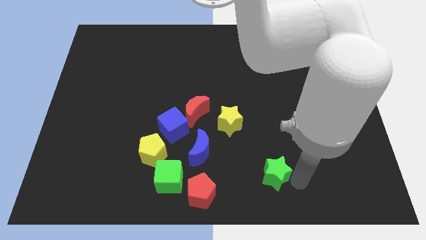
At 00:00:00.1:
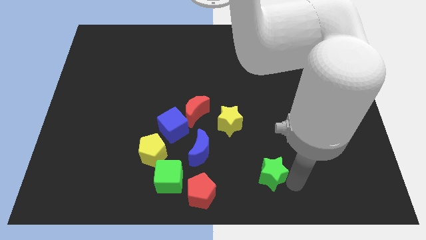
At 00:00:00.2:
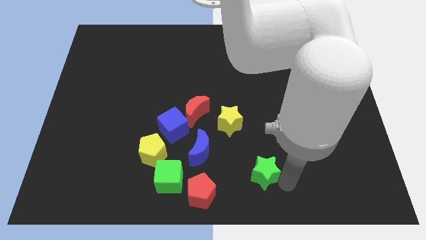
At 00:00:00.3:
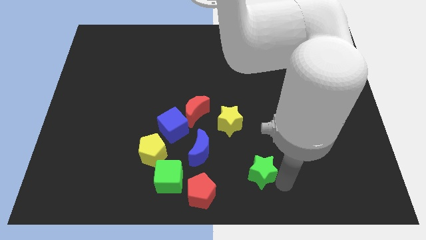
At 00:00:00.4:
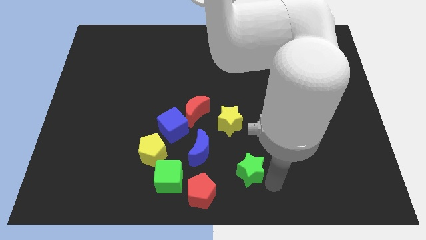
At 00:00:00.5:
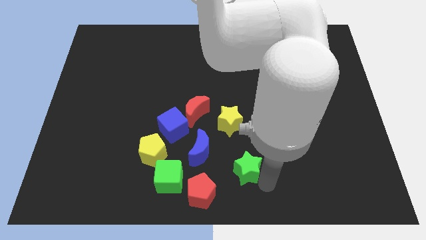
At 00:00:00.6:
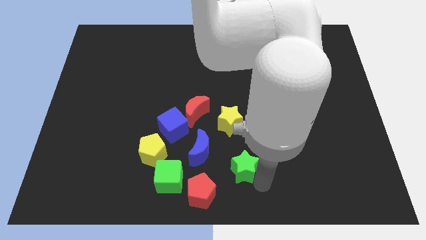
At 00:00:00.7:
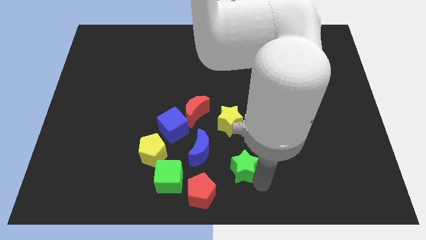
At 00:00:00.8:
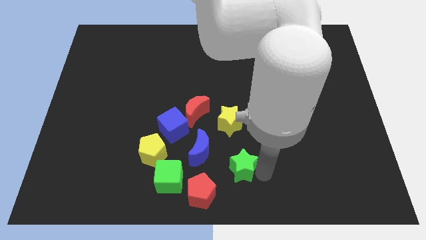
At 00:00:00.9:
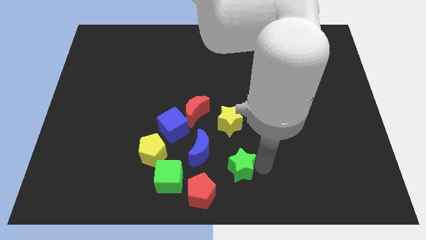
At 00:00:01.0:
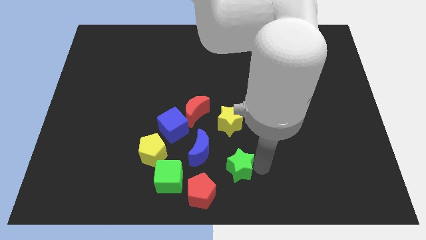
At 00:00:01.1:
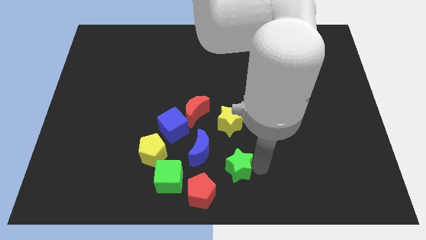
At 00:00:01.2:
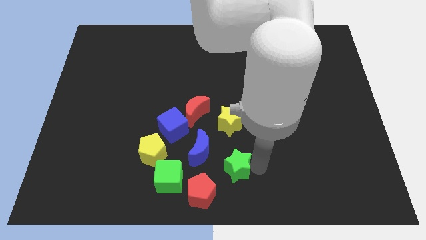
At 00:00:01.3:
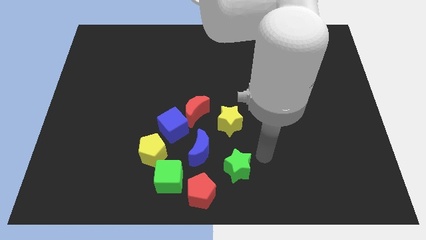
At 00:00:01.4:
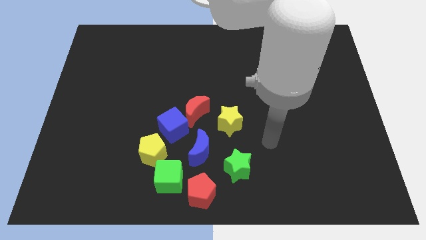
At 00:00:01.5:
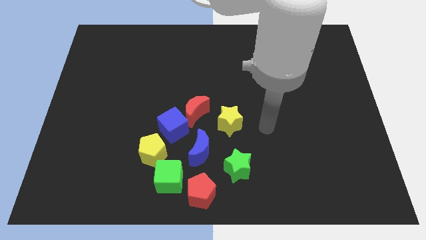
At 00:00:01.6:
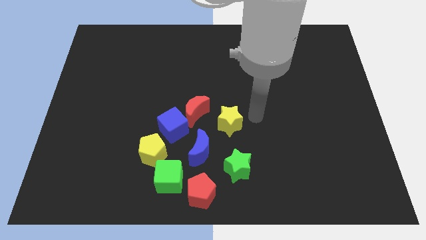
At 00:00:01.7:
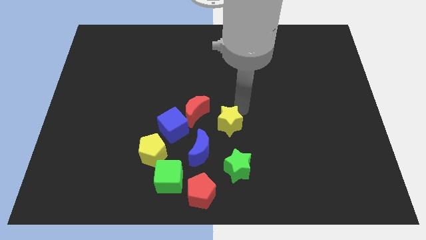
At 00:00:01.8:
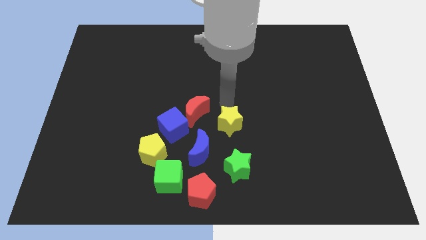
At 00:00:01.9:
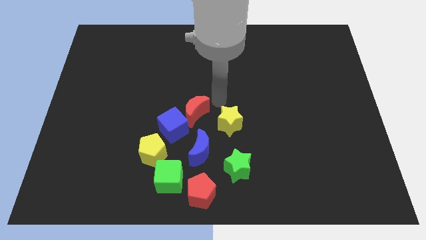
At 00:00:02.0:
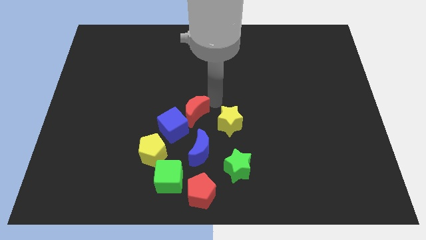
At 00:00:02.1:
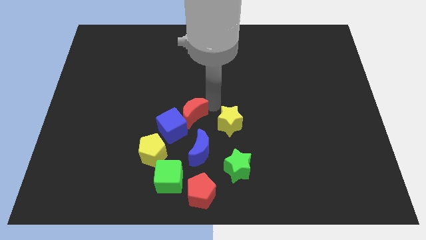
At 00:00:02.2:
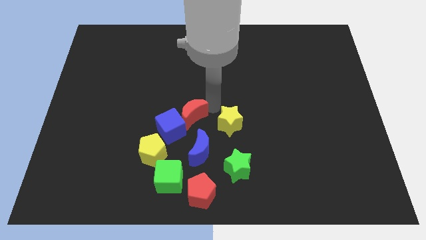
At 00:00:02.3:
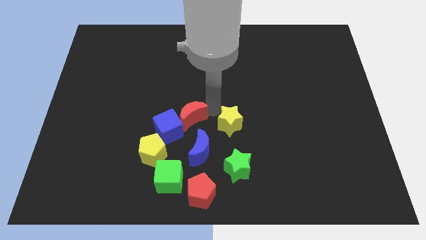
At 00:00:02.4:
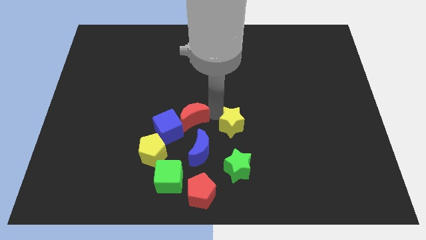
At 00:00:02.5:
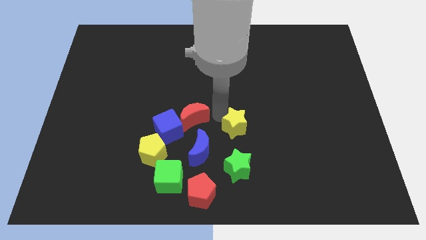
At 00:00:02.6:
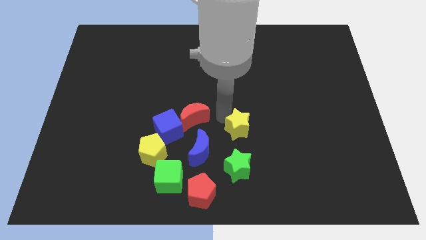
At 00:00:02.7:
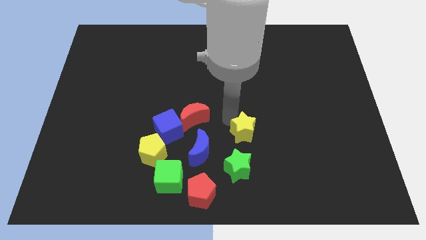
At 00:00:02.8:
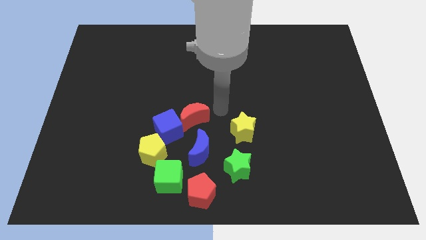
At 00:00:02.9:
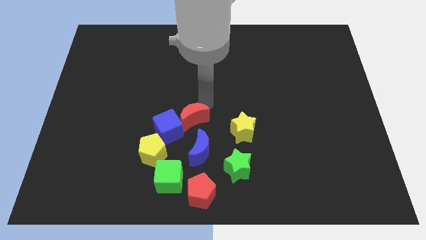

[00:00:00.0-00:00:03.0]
move your arm away from the green star

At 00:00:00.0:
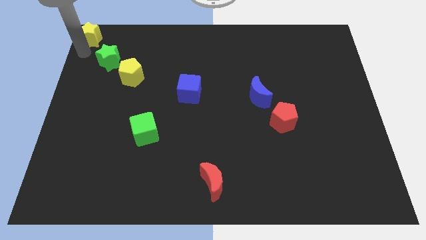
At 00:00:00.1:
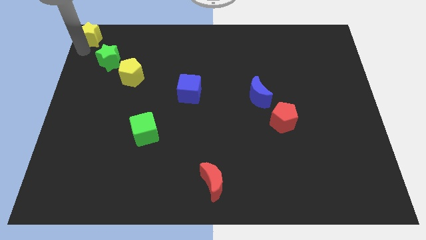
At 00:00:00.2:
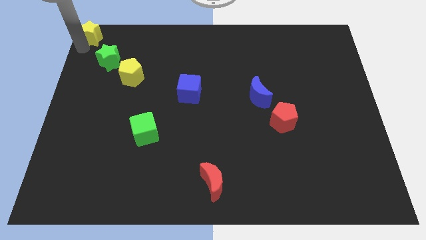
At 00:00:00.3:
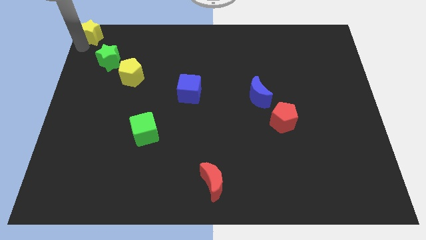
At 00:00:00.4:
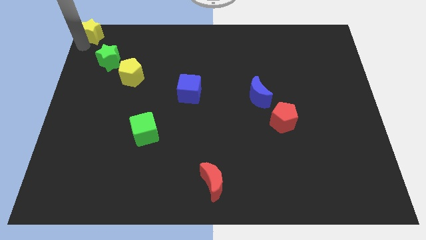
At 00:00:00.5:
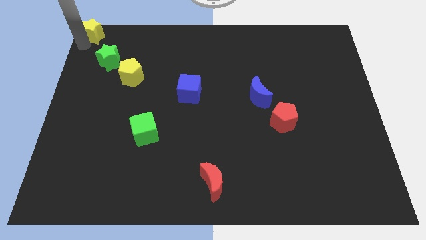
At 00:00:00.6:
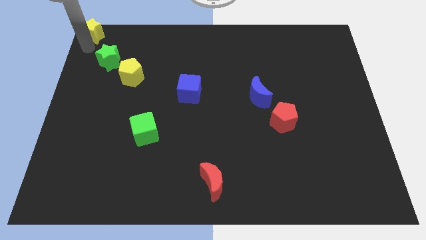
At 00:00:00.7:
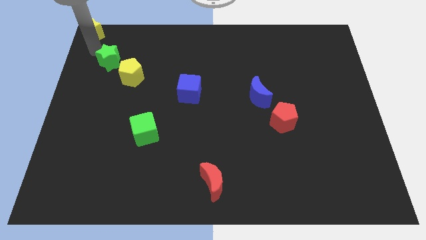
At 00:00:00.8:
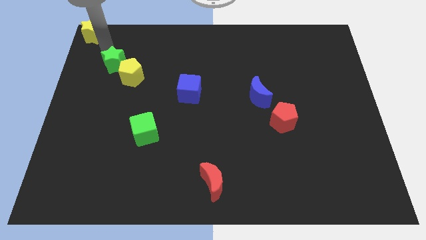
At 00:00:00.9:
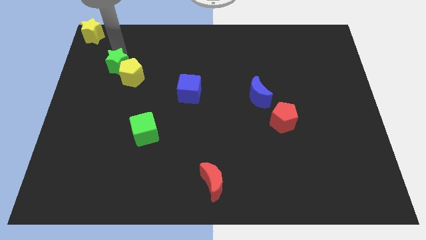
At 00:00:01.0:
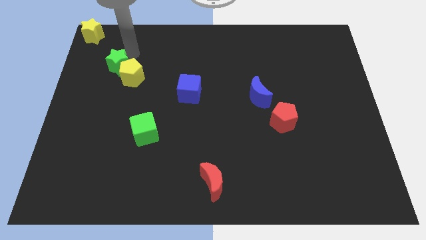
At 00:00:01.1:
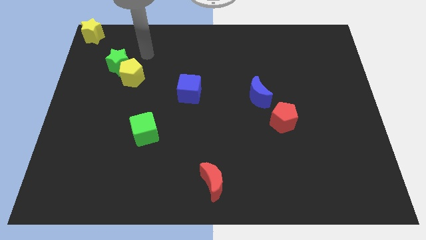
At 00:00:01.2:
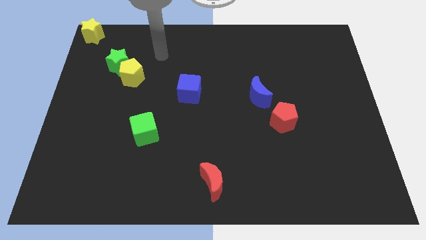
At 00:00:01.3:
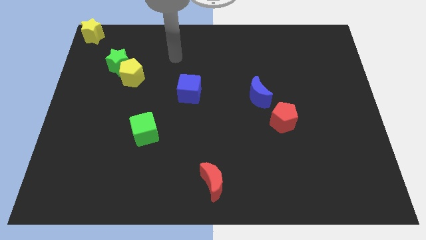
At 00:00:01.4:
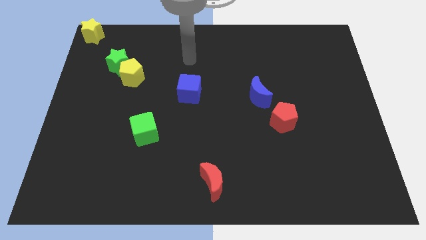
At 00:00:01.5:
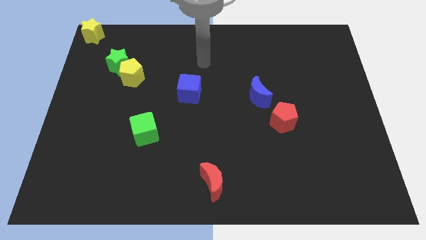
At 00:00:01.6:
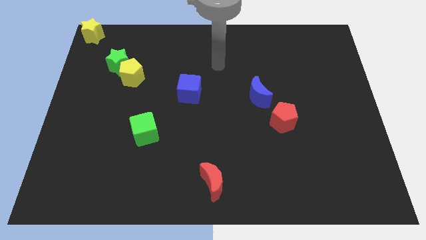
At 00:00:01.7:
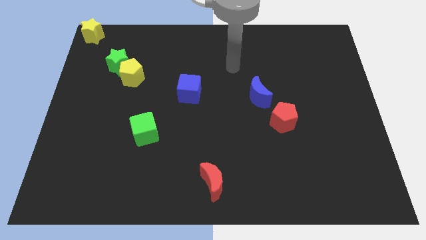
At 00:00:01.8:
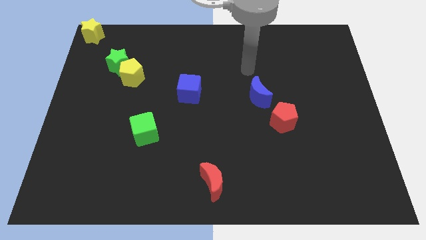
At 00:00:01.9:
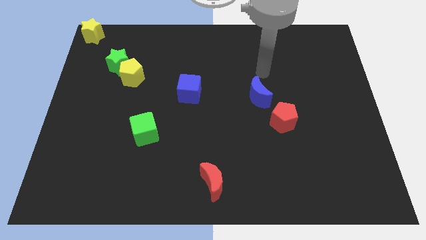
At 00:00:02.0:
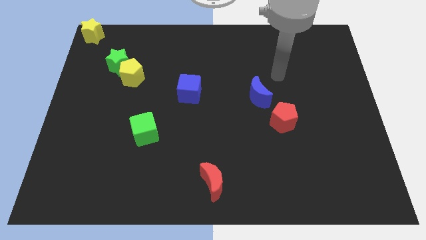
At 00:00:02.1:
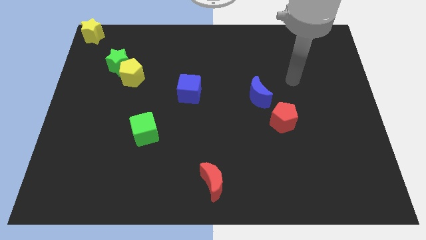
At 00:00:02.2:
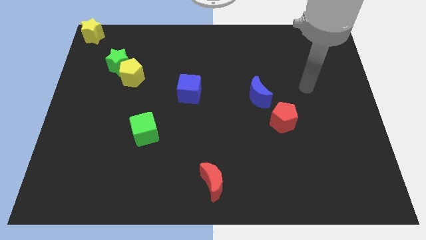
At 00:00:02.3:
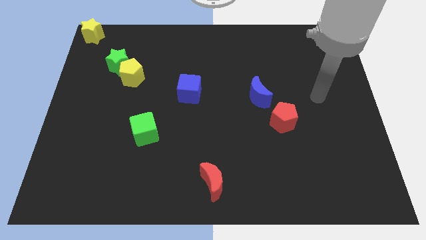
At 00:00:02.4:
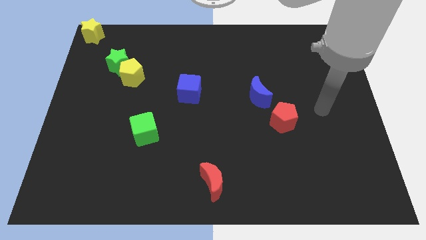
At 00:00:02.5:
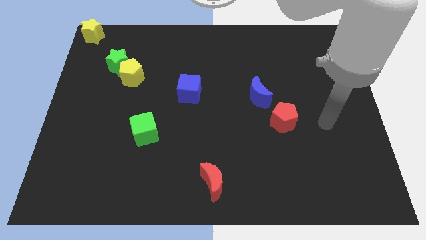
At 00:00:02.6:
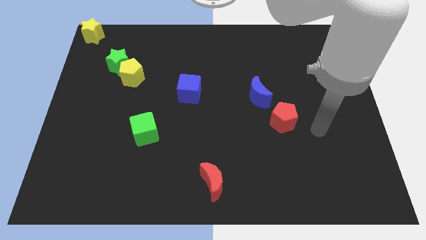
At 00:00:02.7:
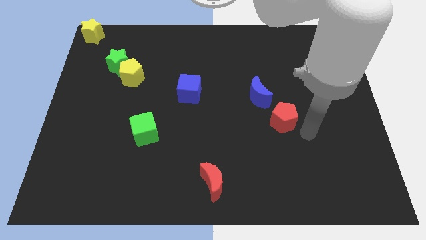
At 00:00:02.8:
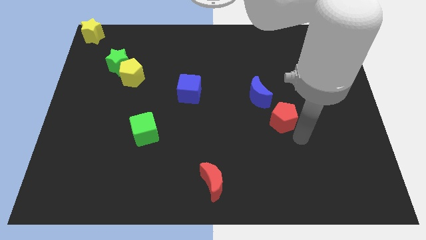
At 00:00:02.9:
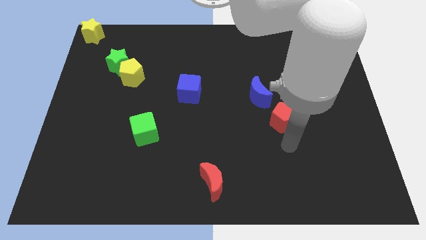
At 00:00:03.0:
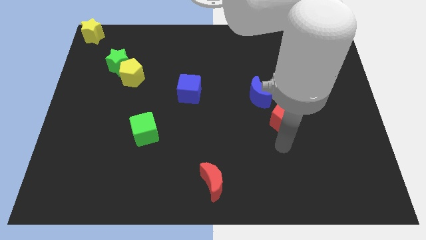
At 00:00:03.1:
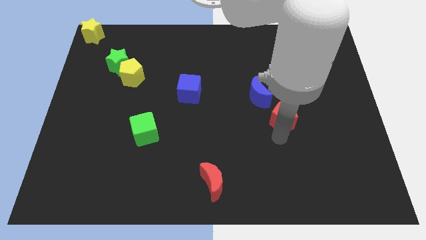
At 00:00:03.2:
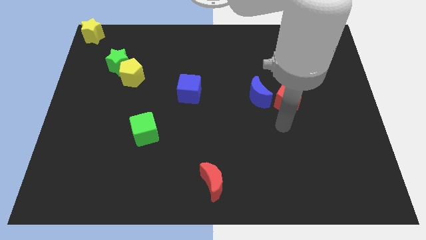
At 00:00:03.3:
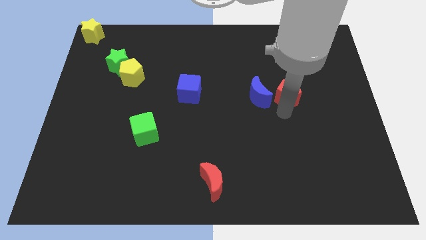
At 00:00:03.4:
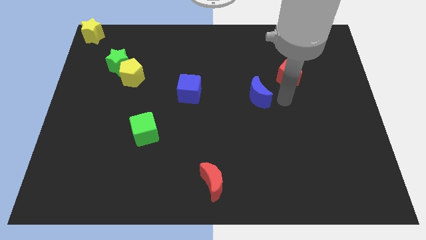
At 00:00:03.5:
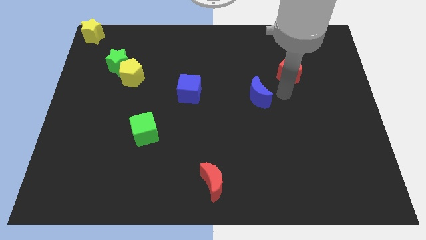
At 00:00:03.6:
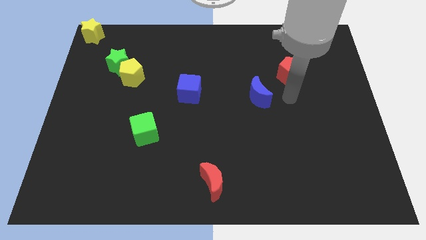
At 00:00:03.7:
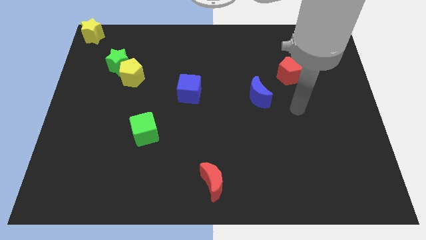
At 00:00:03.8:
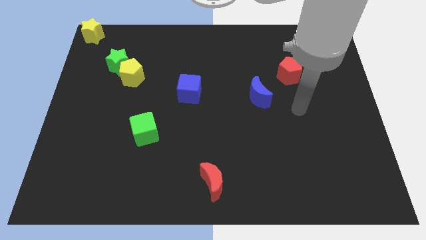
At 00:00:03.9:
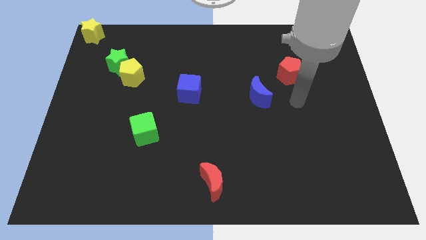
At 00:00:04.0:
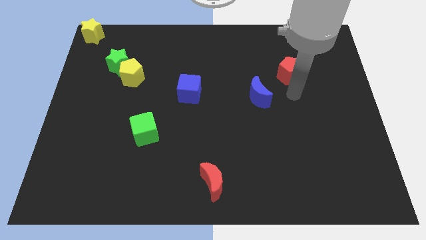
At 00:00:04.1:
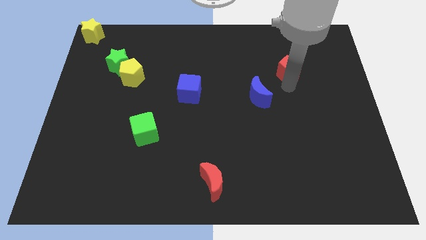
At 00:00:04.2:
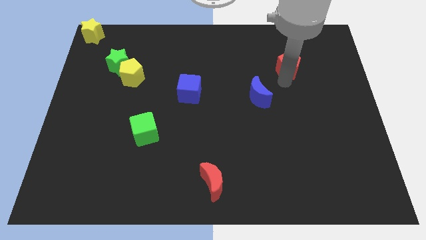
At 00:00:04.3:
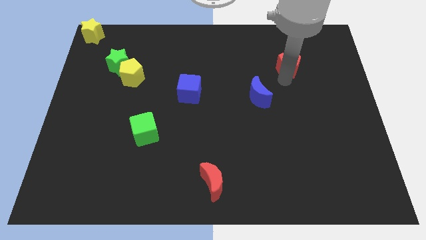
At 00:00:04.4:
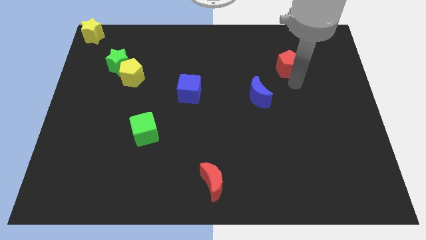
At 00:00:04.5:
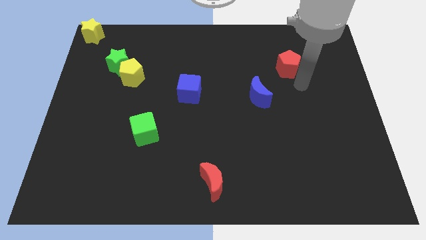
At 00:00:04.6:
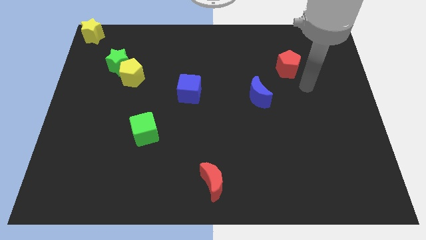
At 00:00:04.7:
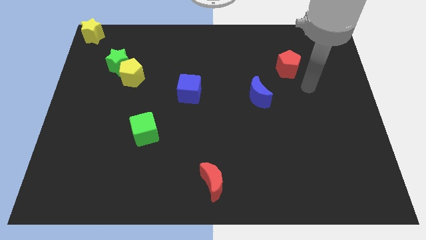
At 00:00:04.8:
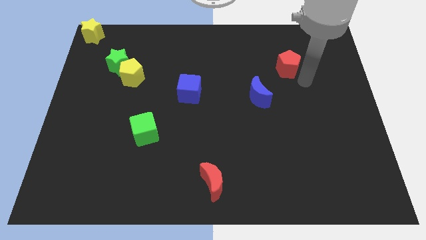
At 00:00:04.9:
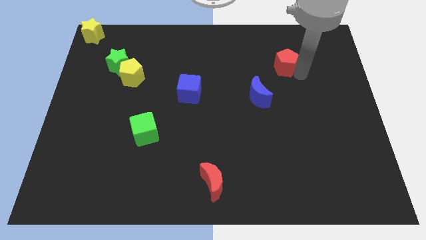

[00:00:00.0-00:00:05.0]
move your arm towards the red pentagon on right bottom of the board

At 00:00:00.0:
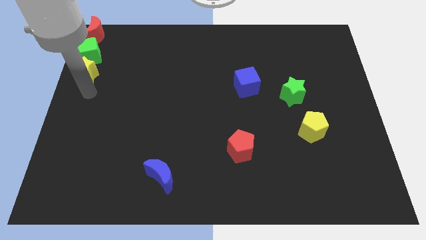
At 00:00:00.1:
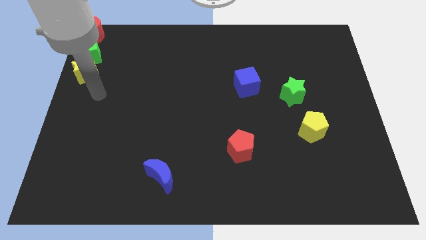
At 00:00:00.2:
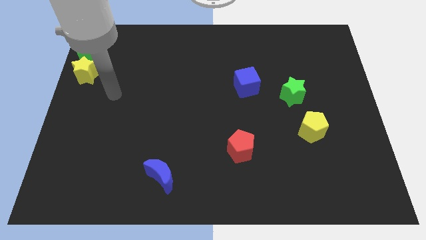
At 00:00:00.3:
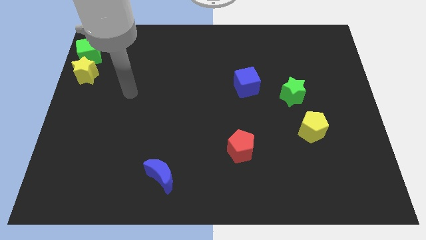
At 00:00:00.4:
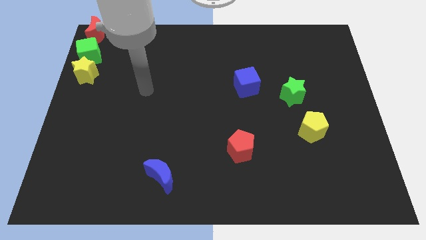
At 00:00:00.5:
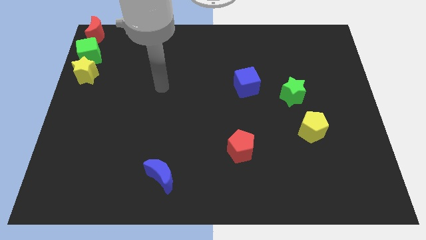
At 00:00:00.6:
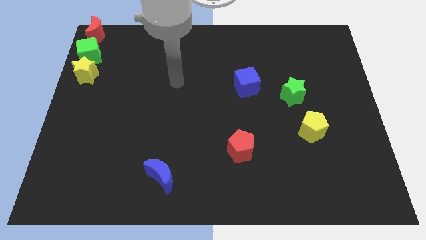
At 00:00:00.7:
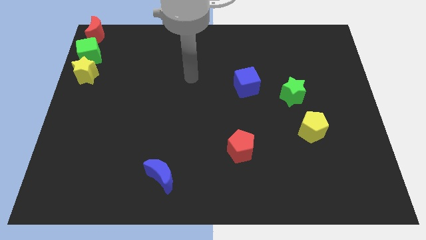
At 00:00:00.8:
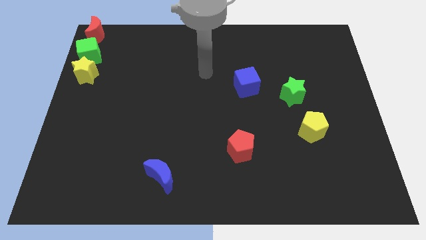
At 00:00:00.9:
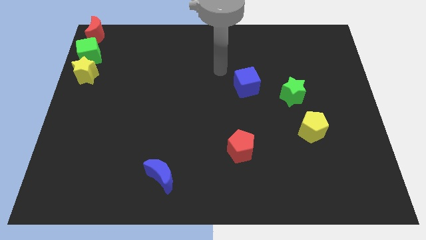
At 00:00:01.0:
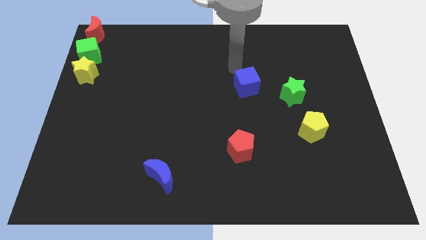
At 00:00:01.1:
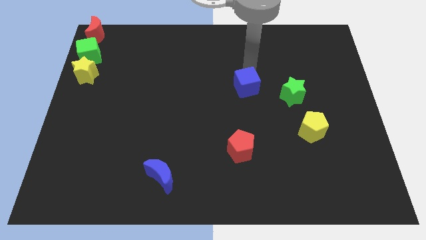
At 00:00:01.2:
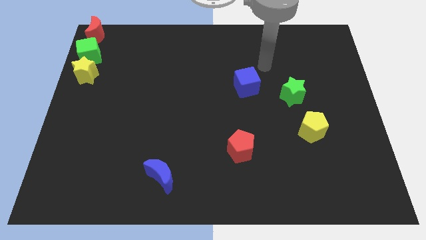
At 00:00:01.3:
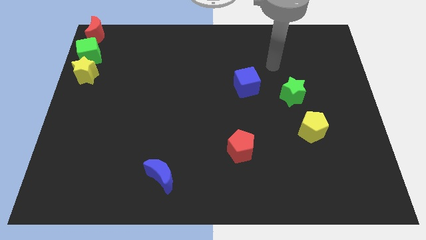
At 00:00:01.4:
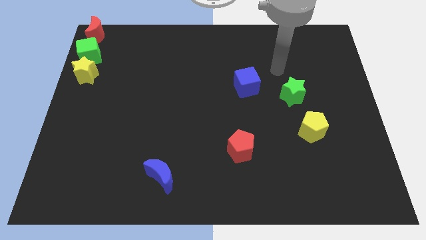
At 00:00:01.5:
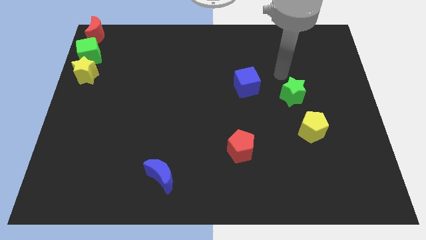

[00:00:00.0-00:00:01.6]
move your arm away from the yellow star
